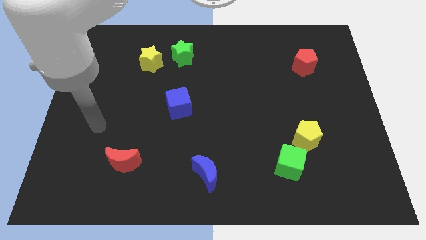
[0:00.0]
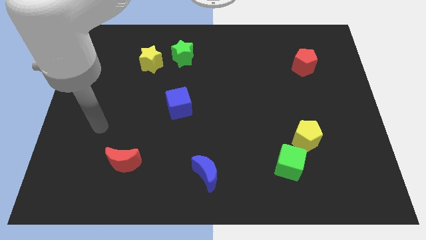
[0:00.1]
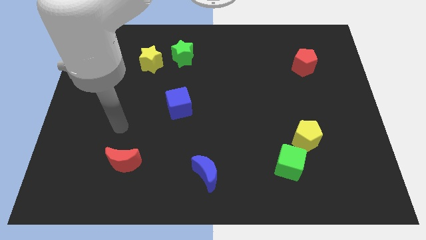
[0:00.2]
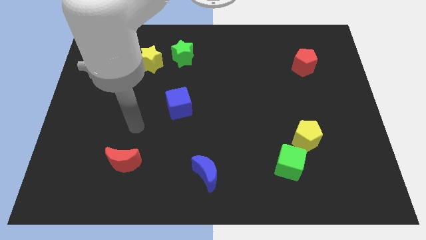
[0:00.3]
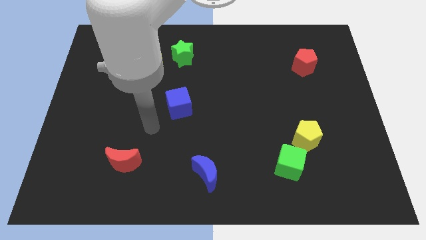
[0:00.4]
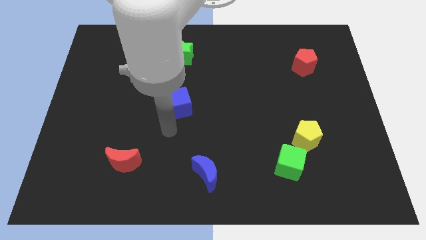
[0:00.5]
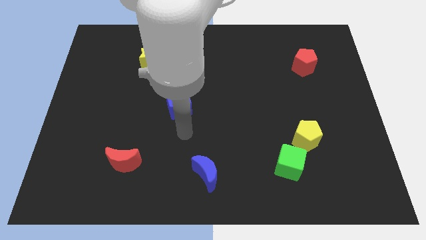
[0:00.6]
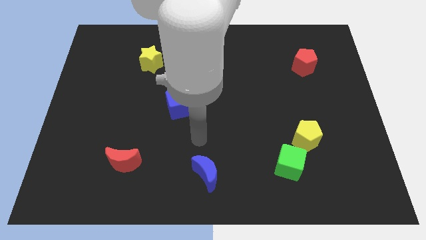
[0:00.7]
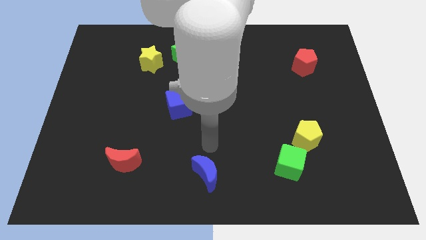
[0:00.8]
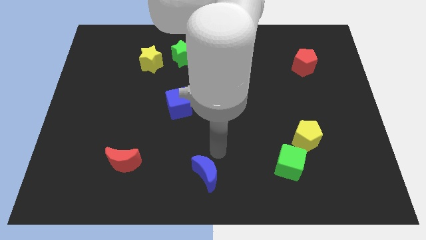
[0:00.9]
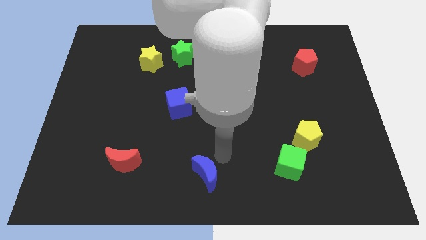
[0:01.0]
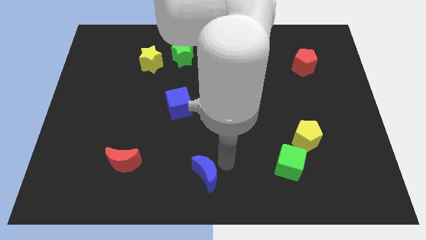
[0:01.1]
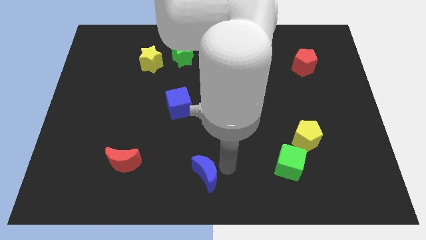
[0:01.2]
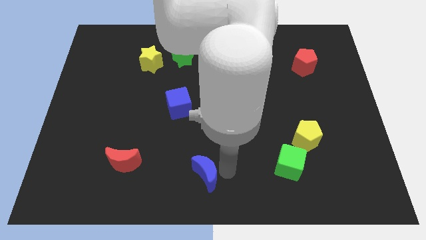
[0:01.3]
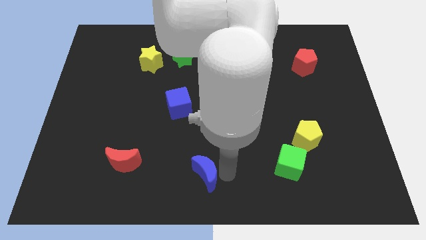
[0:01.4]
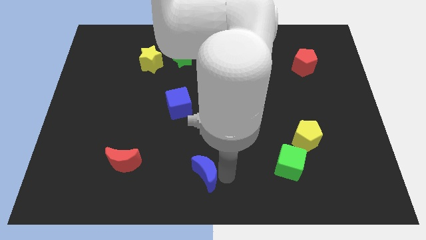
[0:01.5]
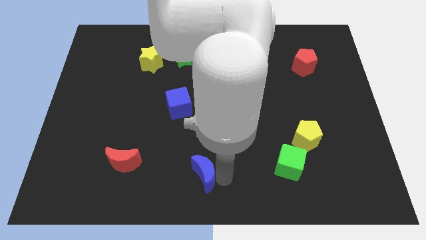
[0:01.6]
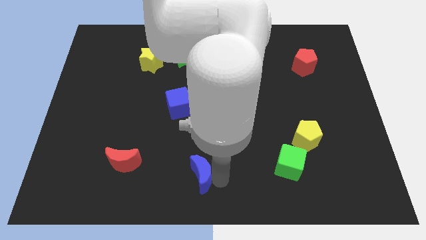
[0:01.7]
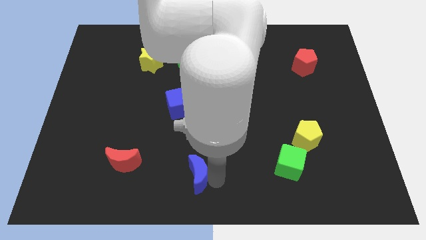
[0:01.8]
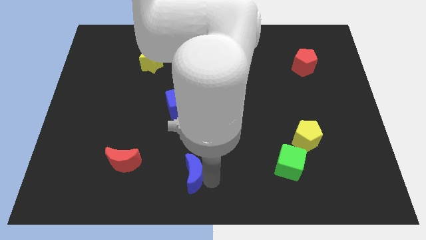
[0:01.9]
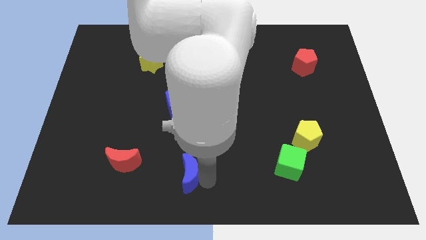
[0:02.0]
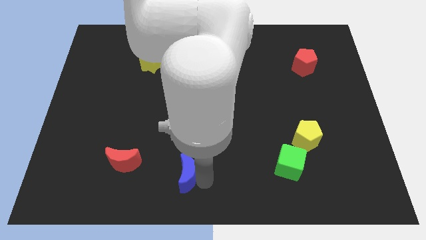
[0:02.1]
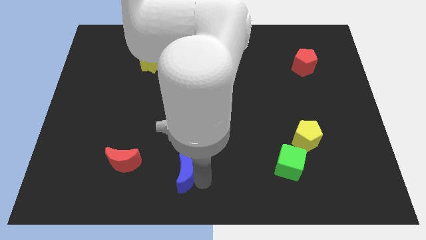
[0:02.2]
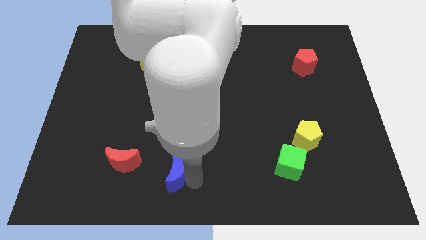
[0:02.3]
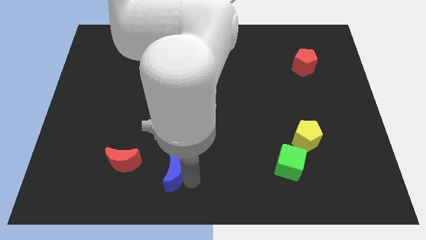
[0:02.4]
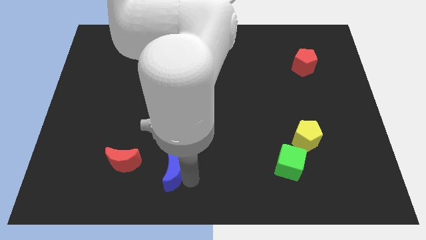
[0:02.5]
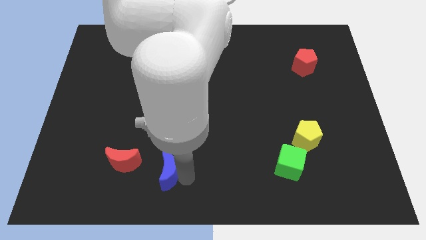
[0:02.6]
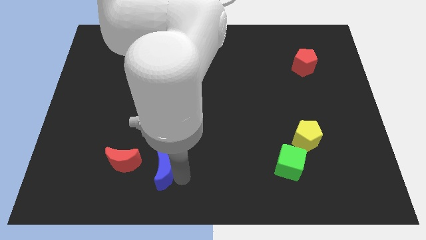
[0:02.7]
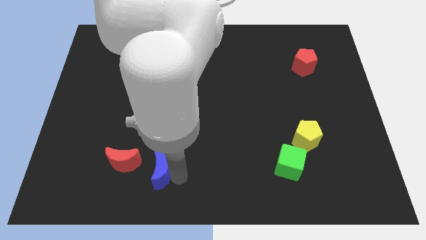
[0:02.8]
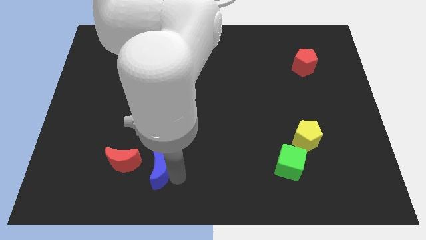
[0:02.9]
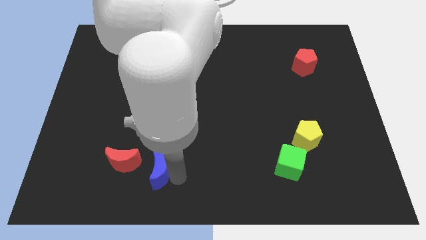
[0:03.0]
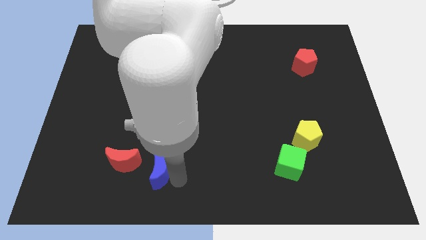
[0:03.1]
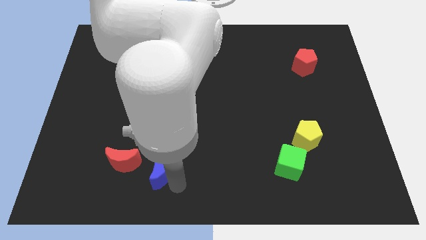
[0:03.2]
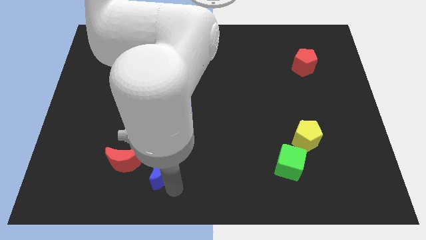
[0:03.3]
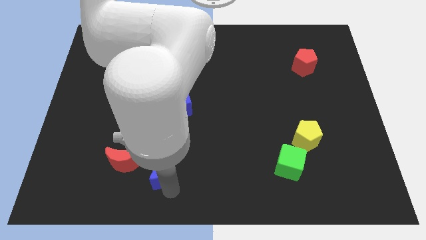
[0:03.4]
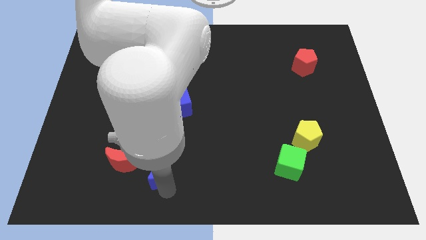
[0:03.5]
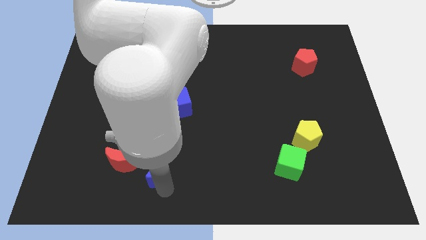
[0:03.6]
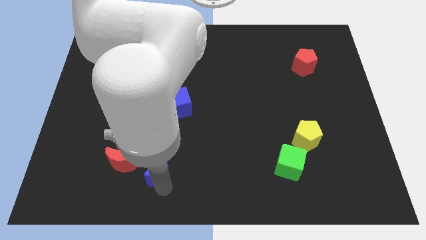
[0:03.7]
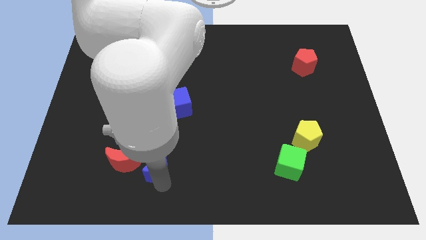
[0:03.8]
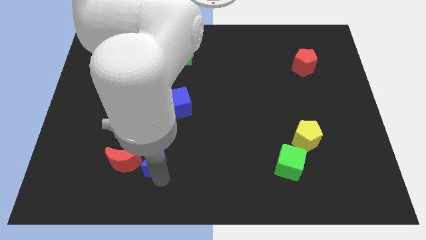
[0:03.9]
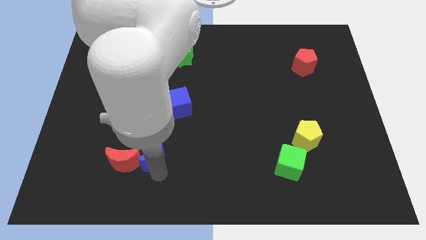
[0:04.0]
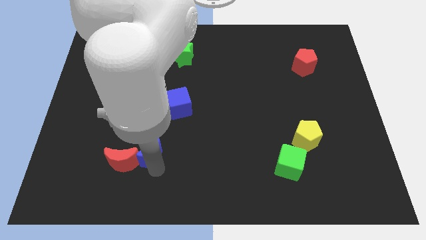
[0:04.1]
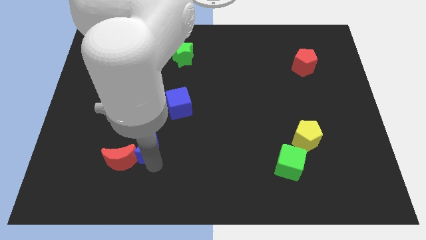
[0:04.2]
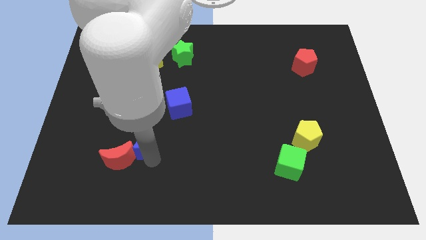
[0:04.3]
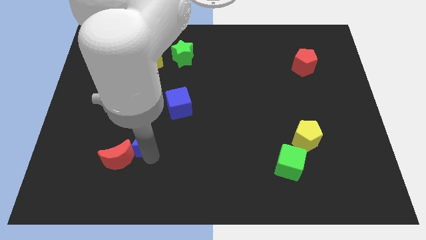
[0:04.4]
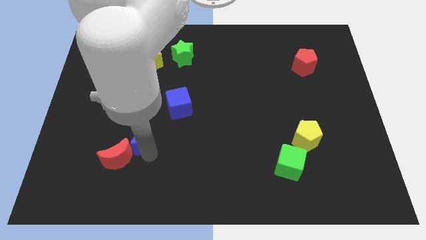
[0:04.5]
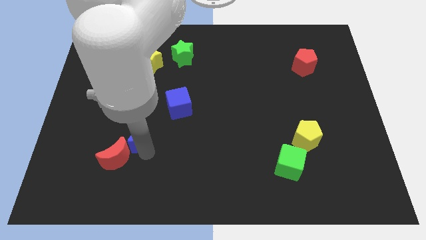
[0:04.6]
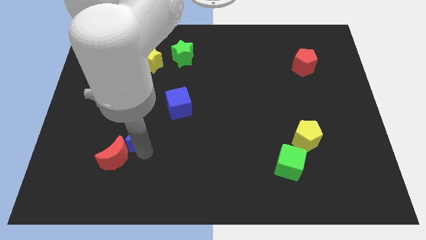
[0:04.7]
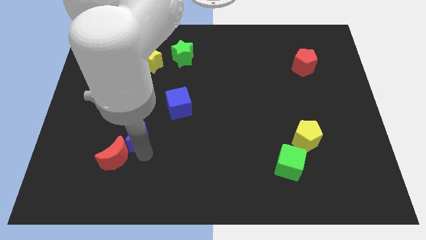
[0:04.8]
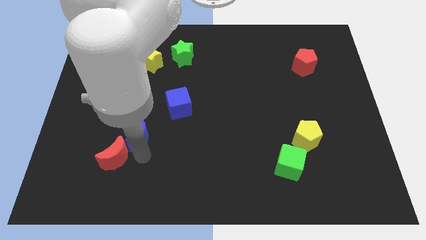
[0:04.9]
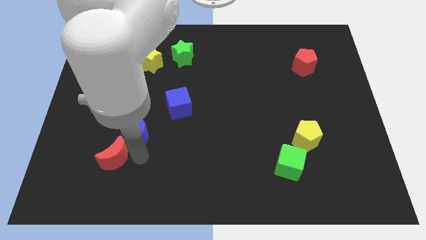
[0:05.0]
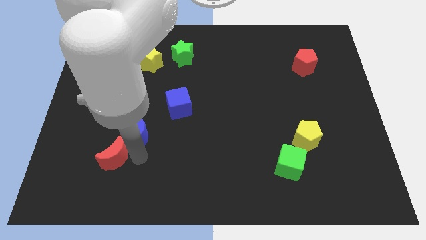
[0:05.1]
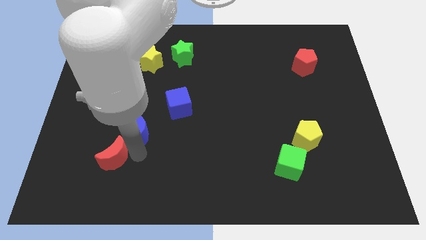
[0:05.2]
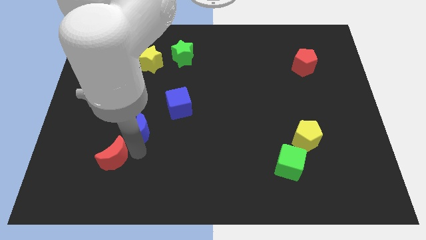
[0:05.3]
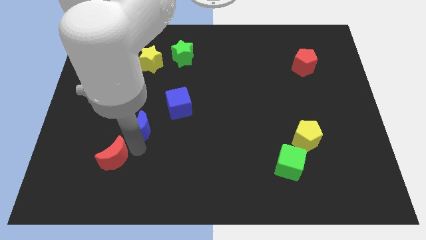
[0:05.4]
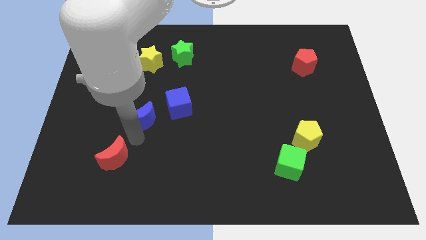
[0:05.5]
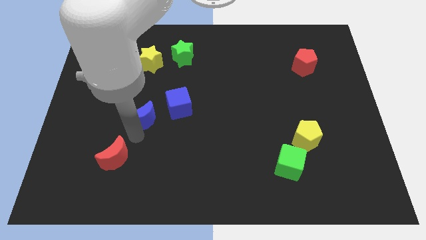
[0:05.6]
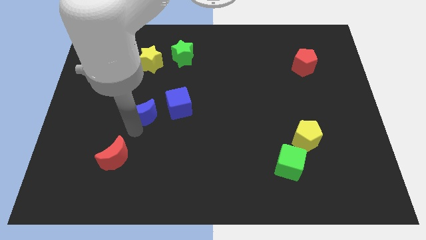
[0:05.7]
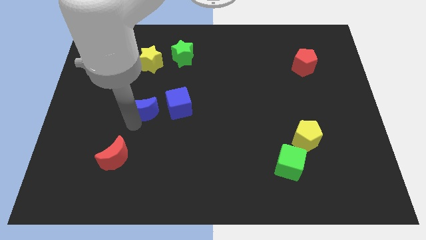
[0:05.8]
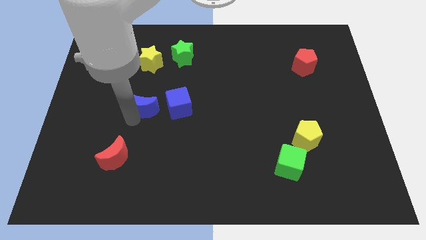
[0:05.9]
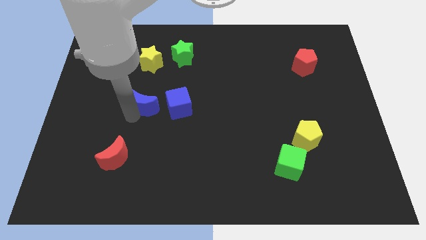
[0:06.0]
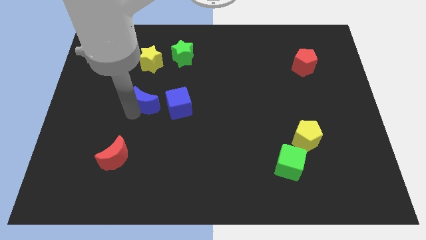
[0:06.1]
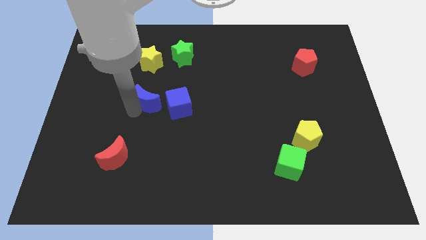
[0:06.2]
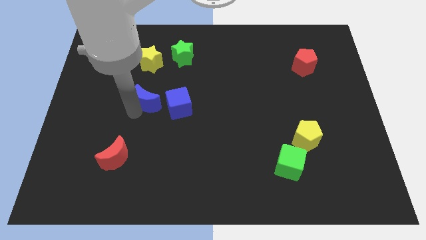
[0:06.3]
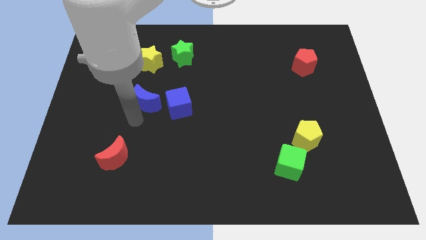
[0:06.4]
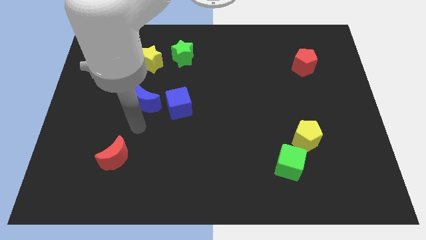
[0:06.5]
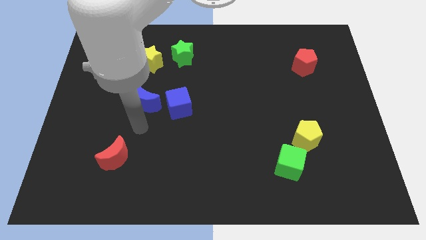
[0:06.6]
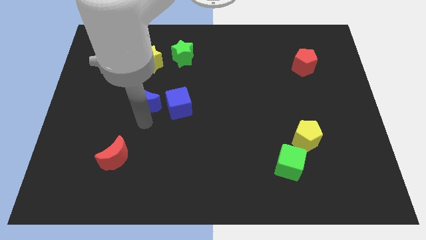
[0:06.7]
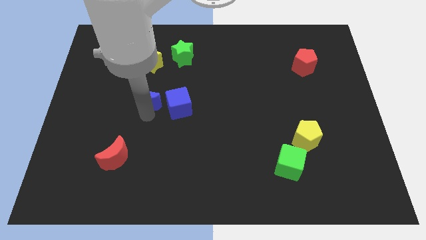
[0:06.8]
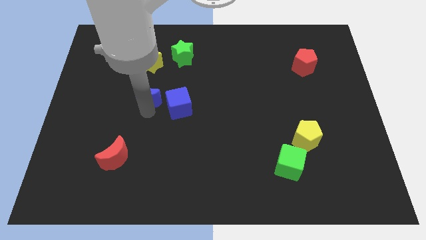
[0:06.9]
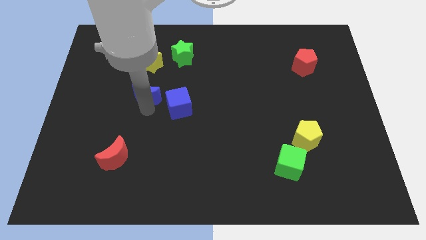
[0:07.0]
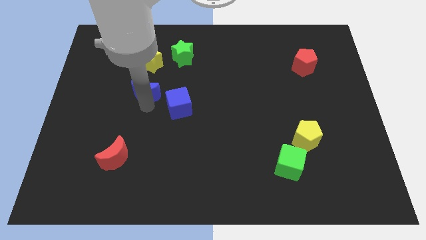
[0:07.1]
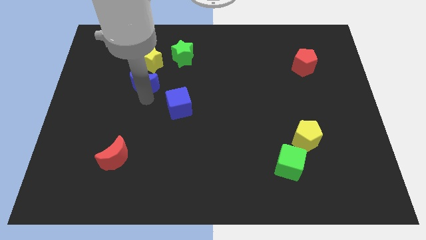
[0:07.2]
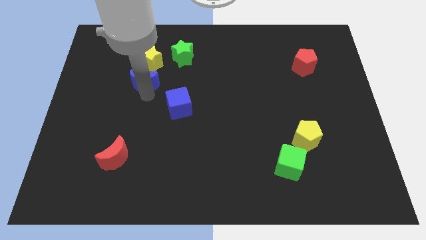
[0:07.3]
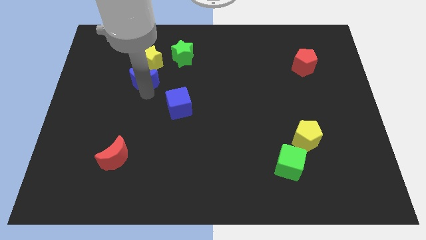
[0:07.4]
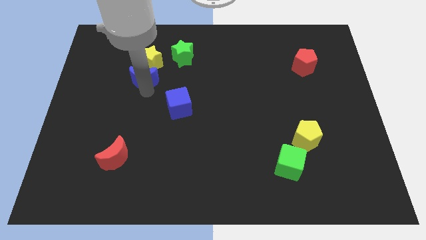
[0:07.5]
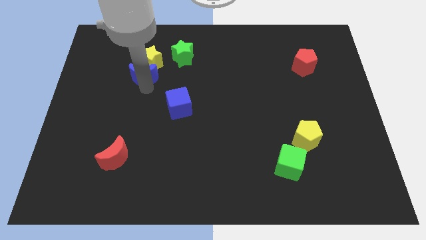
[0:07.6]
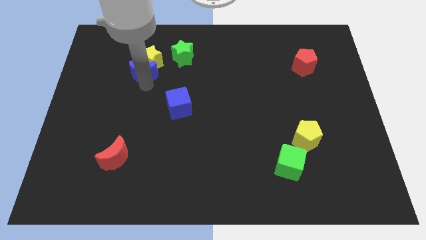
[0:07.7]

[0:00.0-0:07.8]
put the blue moon next to the yellow star

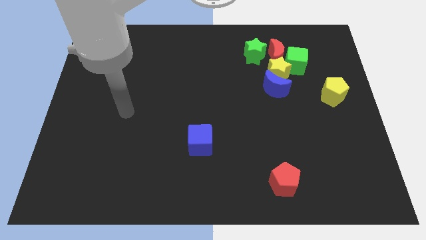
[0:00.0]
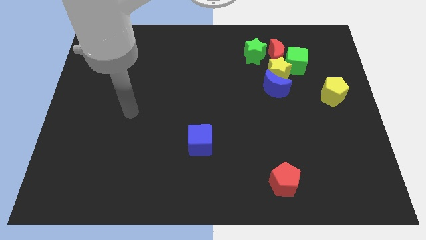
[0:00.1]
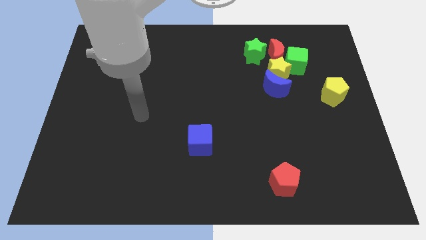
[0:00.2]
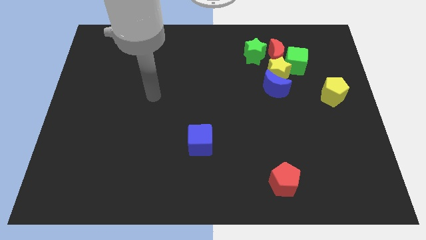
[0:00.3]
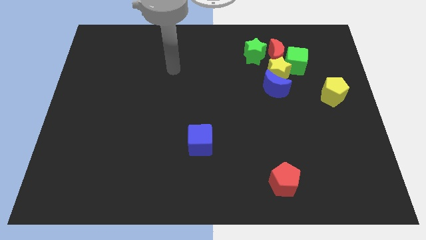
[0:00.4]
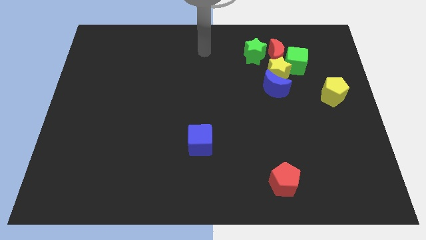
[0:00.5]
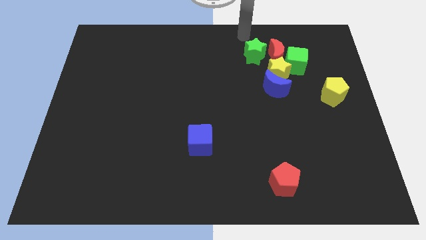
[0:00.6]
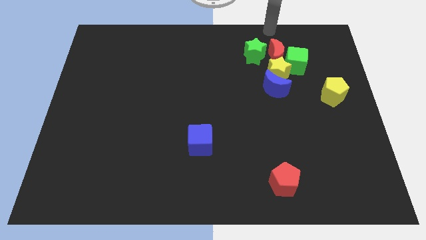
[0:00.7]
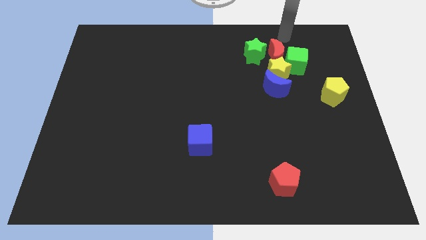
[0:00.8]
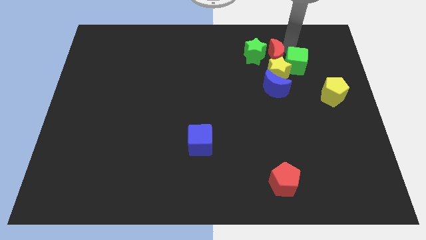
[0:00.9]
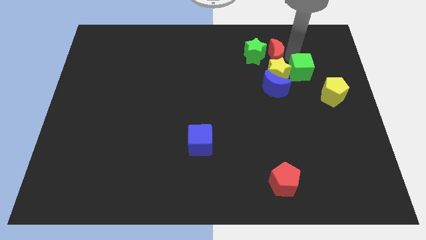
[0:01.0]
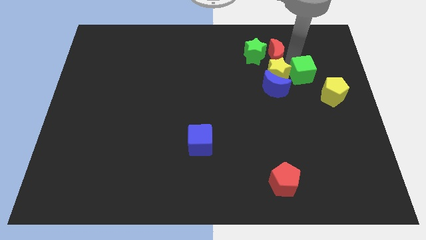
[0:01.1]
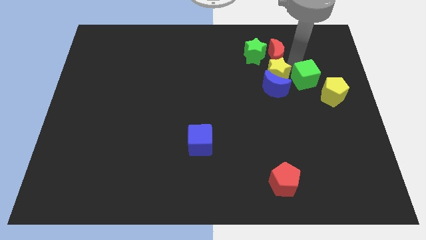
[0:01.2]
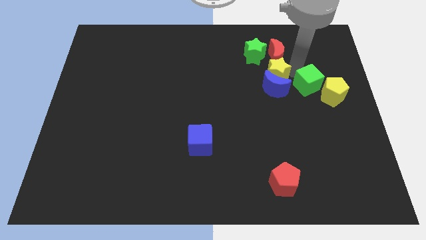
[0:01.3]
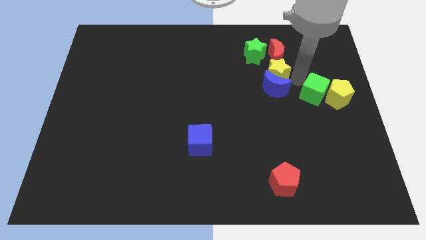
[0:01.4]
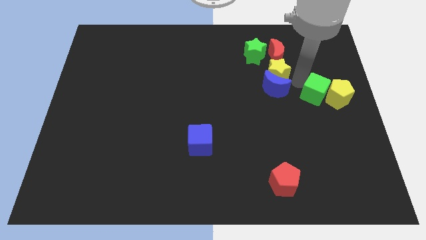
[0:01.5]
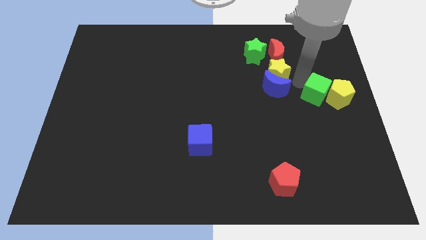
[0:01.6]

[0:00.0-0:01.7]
put the green cube next to the yellow pentagon
